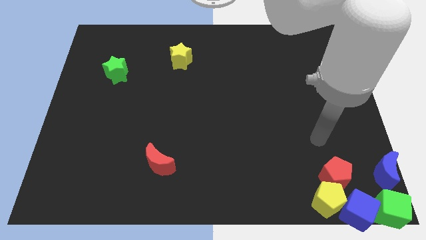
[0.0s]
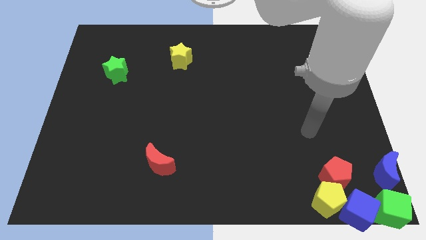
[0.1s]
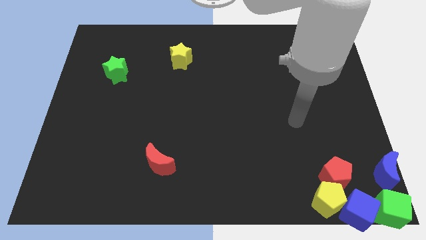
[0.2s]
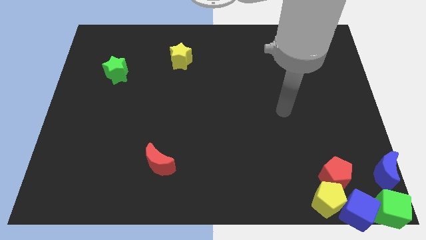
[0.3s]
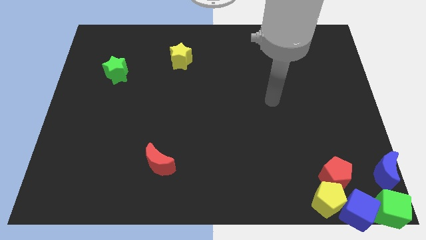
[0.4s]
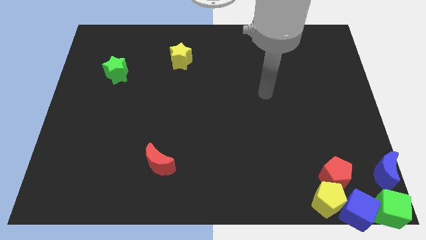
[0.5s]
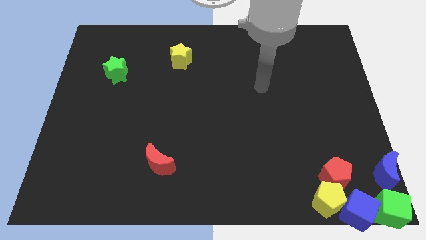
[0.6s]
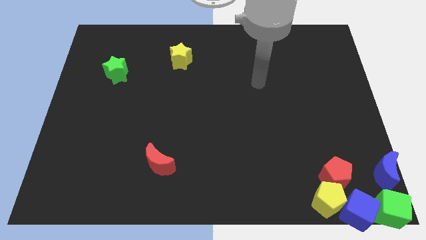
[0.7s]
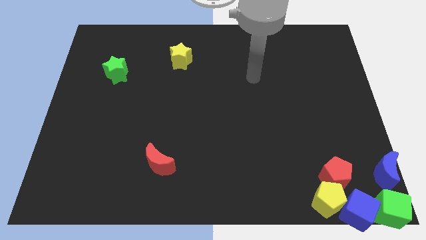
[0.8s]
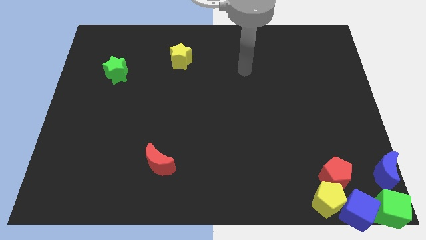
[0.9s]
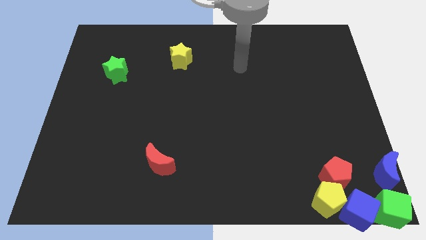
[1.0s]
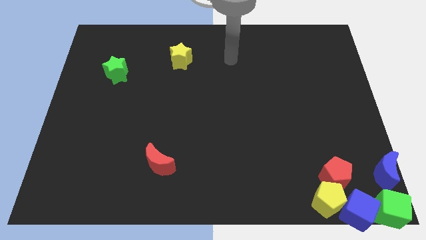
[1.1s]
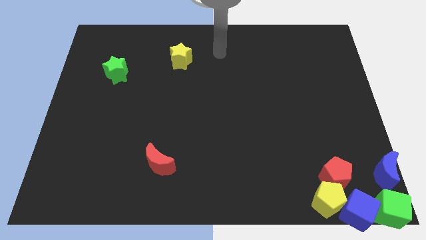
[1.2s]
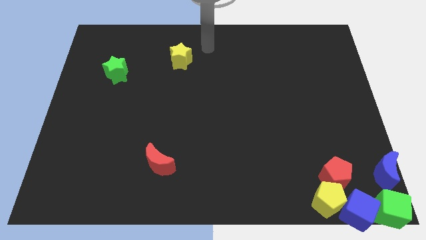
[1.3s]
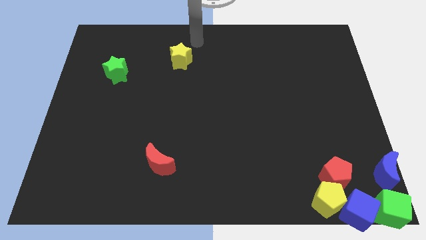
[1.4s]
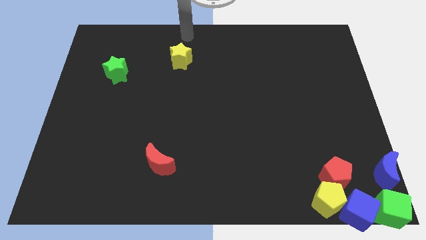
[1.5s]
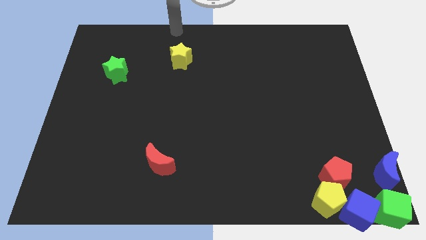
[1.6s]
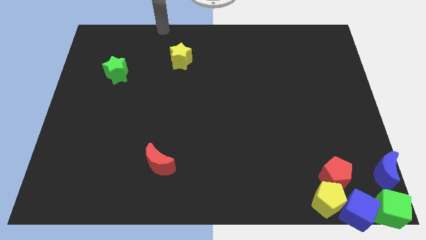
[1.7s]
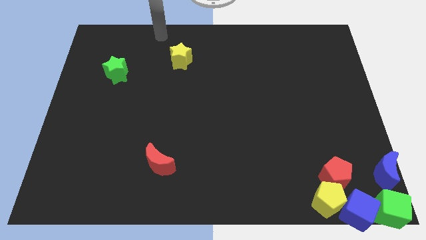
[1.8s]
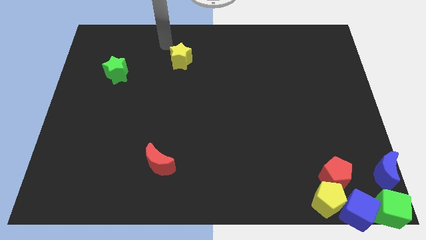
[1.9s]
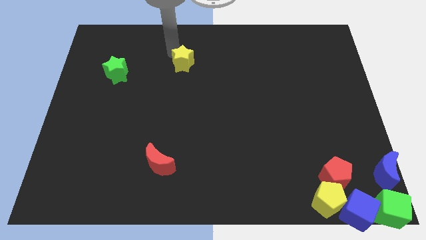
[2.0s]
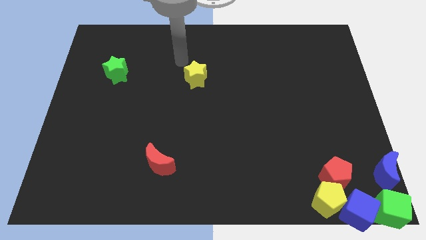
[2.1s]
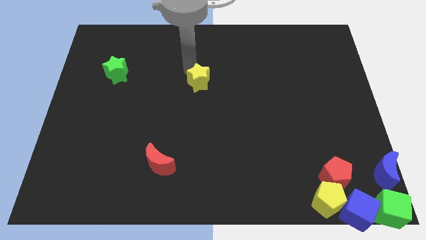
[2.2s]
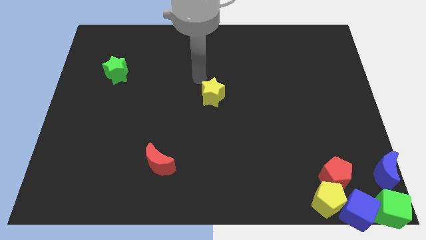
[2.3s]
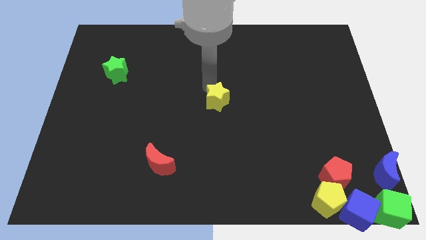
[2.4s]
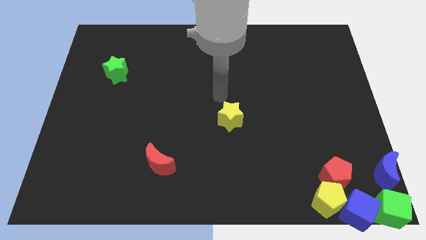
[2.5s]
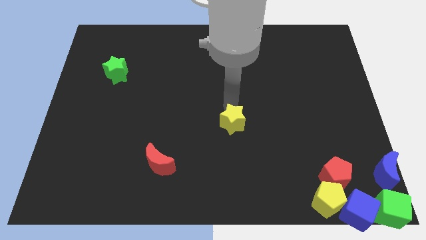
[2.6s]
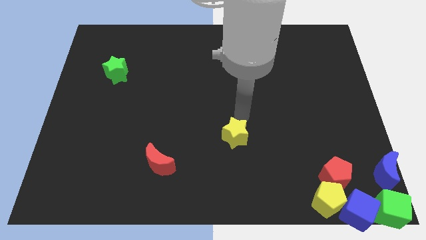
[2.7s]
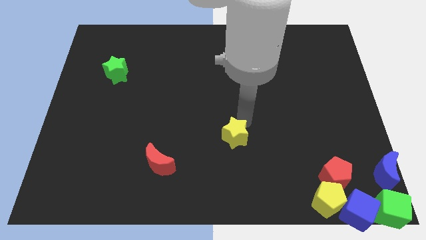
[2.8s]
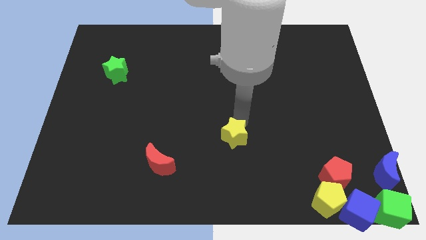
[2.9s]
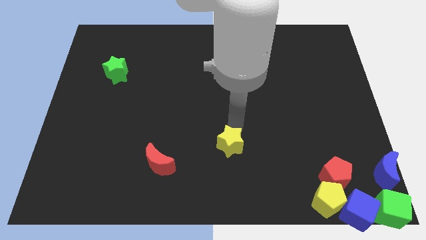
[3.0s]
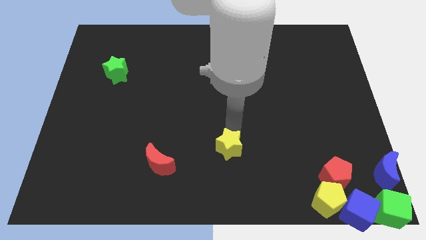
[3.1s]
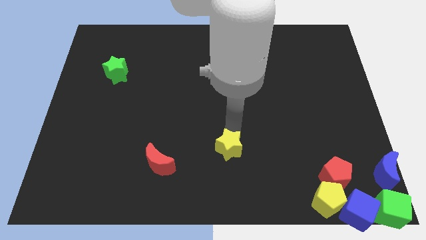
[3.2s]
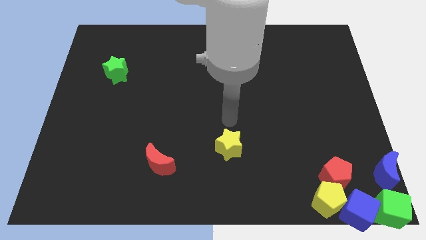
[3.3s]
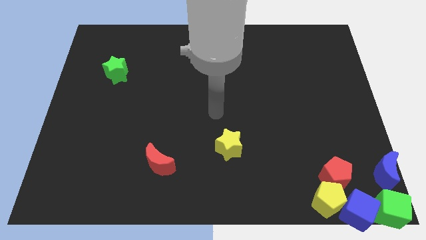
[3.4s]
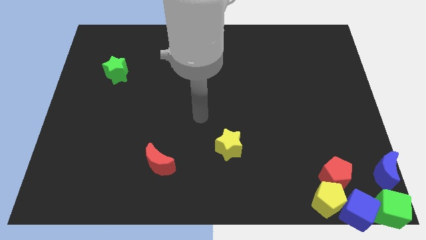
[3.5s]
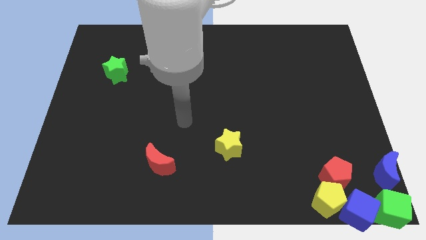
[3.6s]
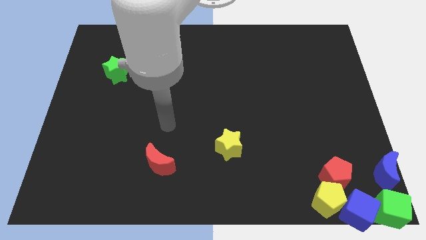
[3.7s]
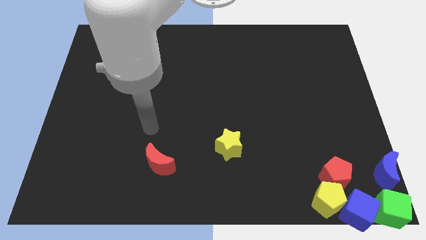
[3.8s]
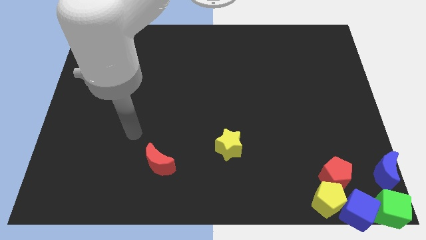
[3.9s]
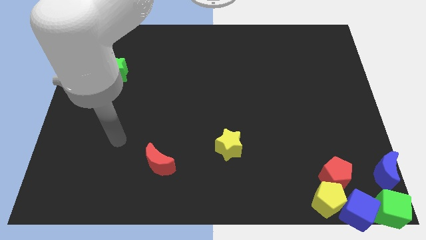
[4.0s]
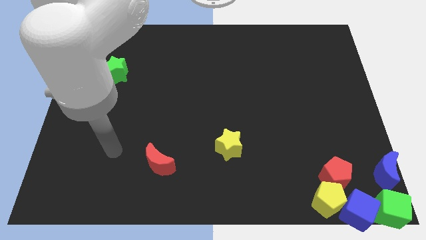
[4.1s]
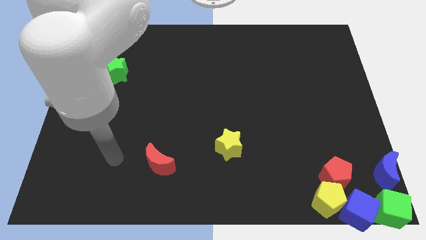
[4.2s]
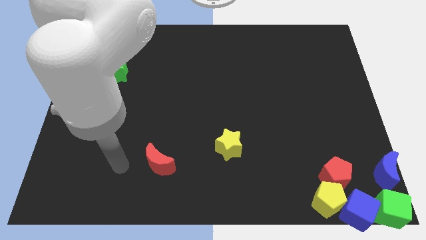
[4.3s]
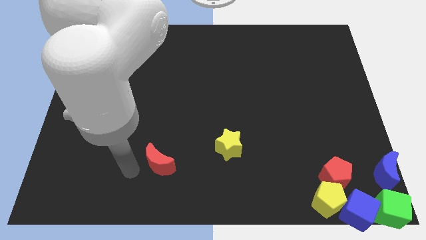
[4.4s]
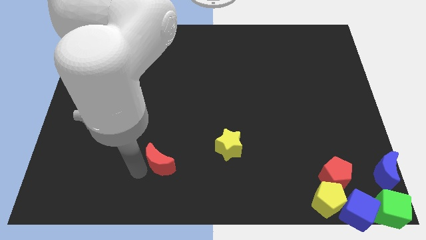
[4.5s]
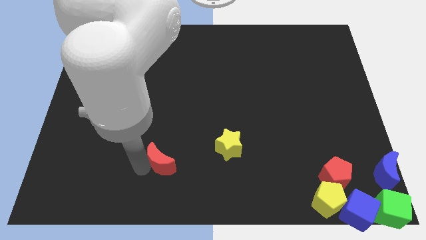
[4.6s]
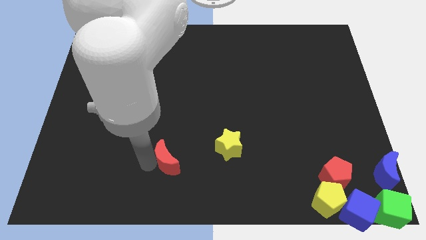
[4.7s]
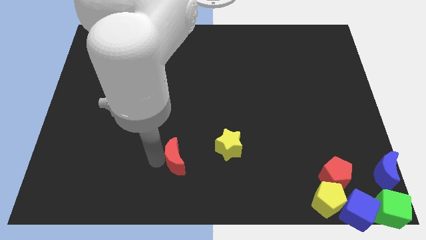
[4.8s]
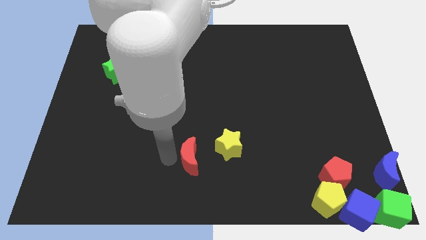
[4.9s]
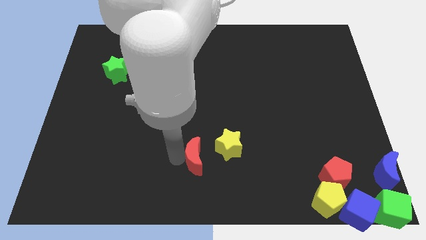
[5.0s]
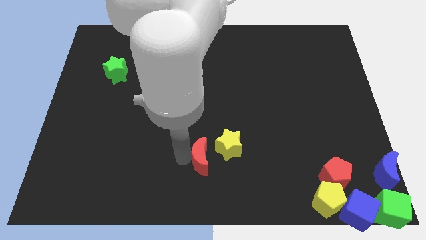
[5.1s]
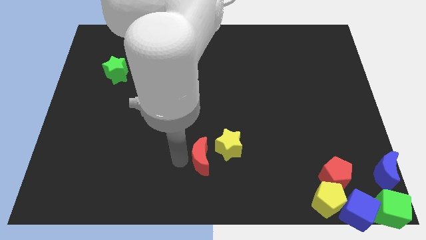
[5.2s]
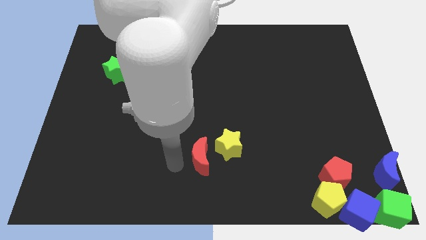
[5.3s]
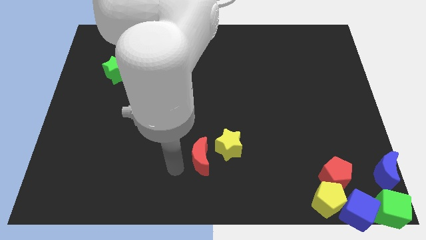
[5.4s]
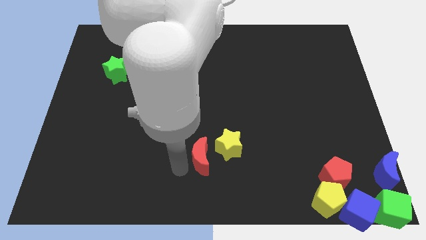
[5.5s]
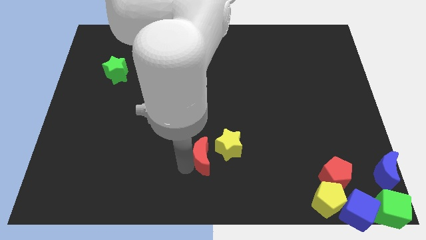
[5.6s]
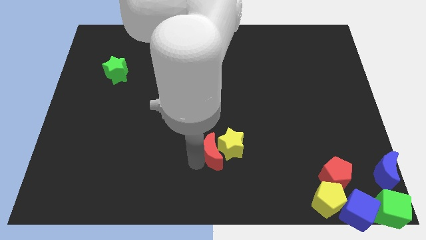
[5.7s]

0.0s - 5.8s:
make a group of blocks with yellow star and red crescent

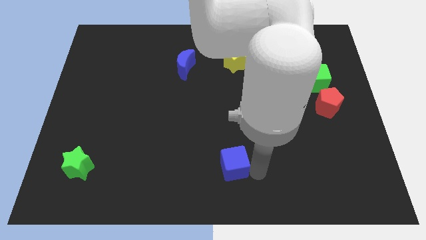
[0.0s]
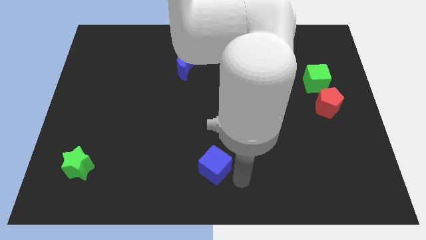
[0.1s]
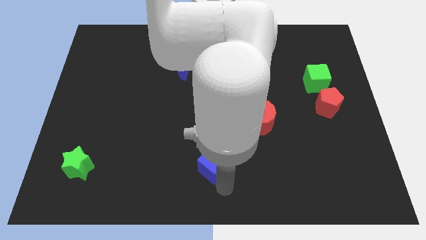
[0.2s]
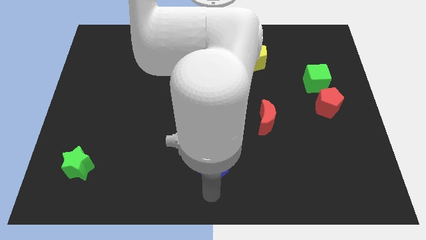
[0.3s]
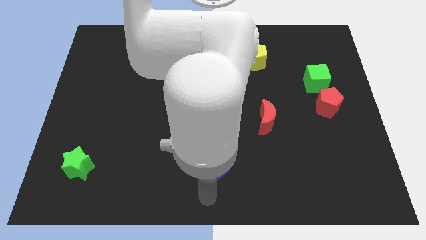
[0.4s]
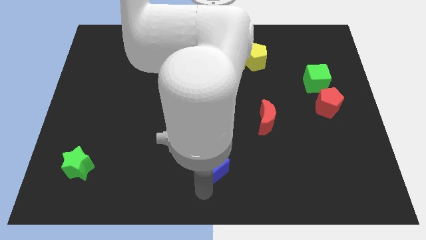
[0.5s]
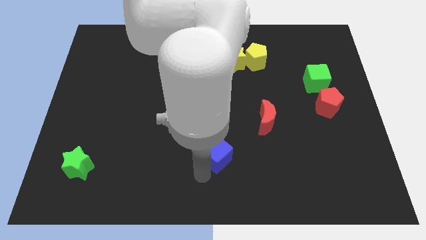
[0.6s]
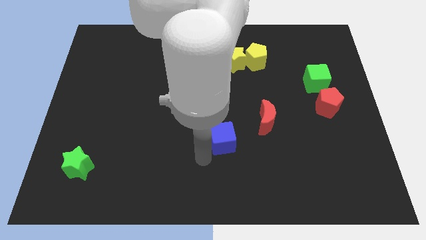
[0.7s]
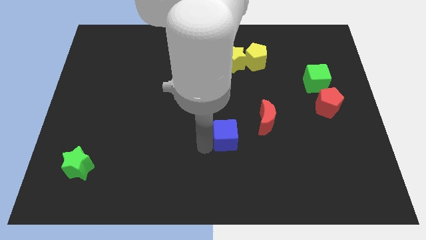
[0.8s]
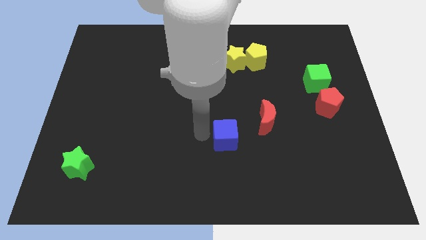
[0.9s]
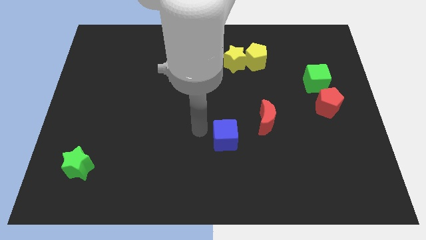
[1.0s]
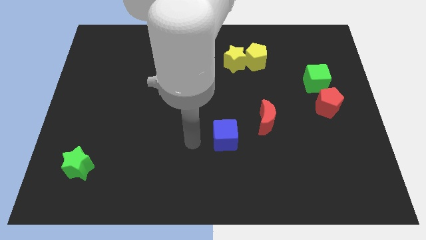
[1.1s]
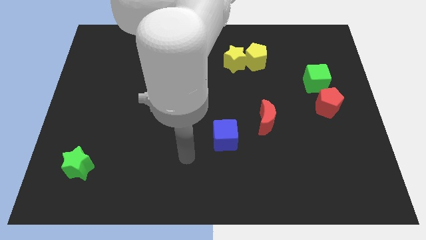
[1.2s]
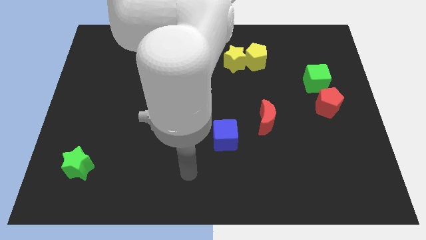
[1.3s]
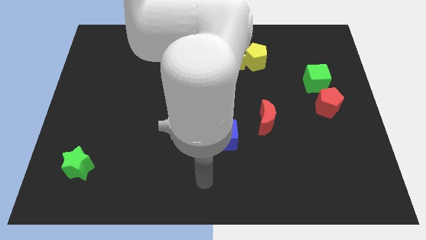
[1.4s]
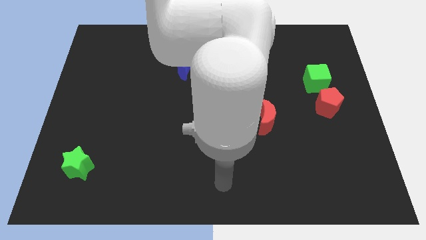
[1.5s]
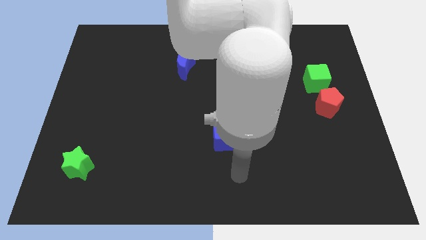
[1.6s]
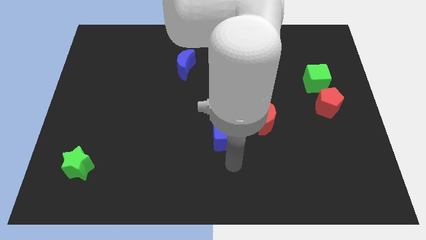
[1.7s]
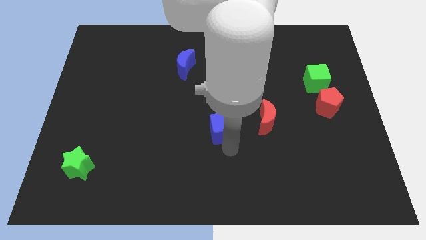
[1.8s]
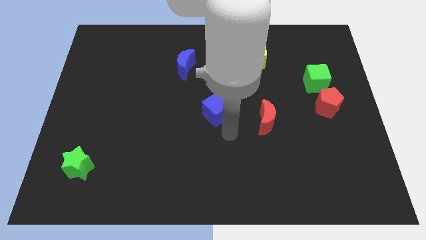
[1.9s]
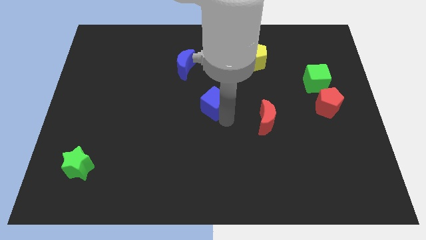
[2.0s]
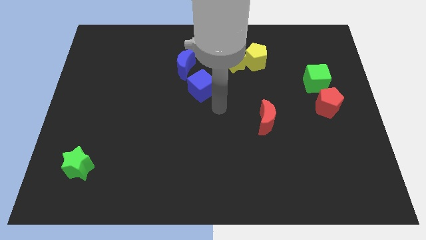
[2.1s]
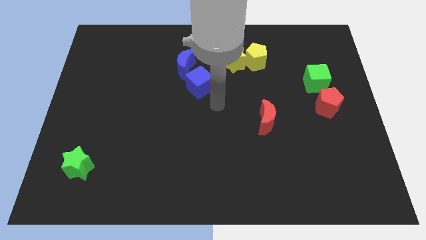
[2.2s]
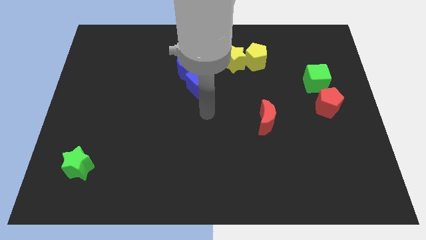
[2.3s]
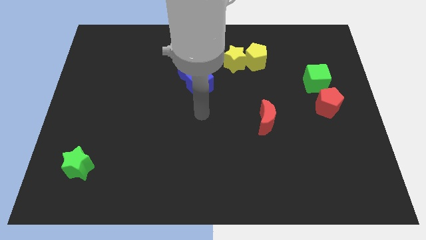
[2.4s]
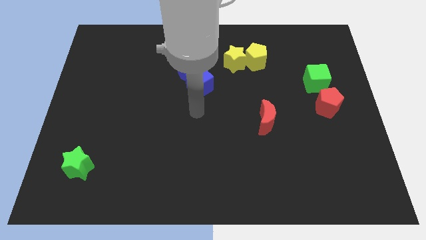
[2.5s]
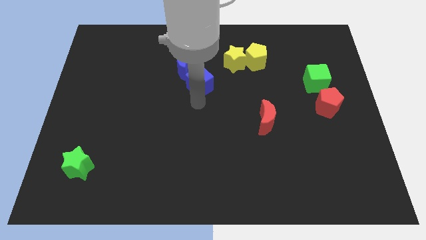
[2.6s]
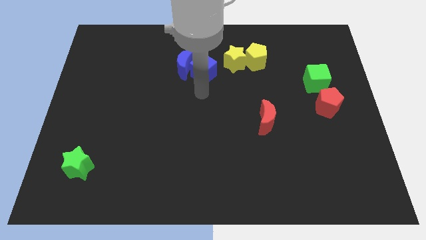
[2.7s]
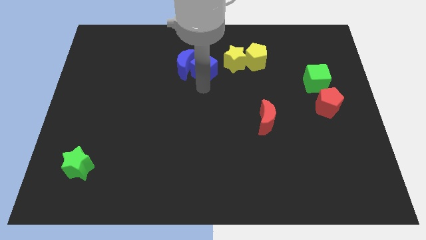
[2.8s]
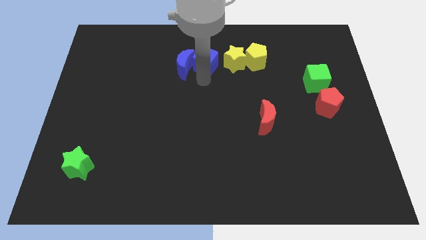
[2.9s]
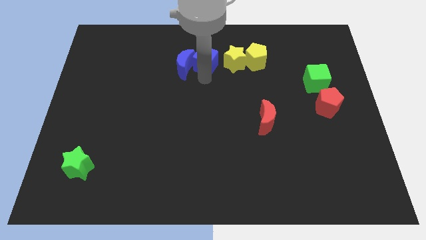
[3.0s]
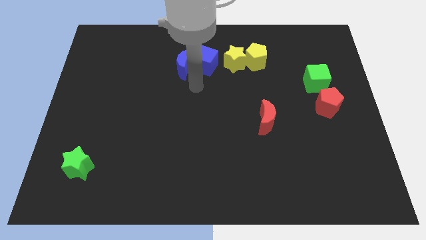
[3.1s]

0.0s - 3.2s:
place the blue cube close to the blue moon
